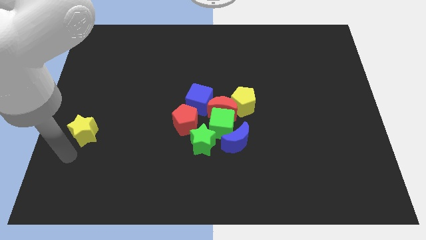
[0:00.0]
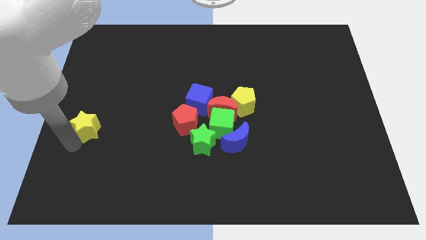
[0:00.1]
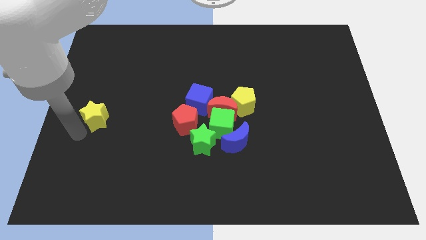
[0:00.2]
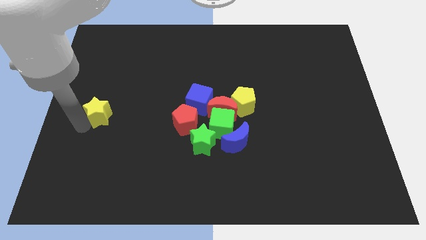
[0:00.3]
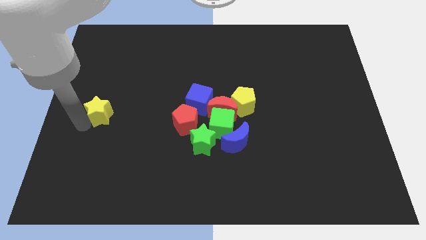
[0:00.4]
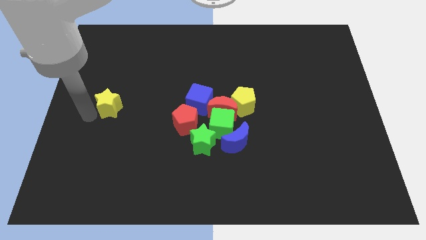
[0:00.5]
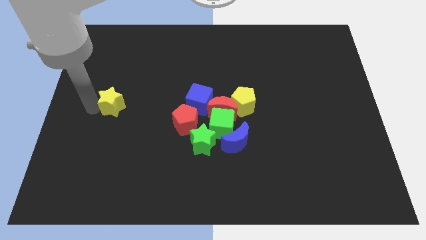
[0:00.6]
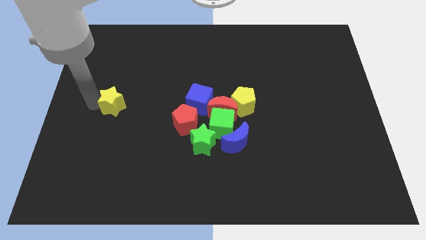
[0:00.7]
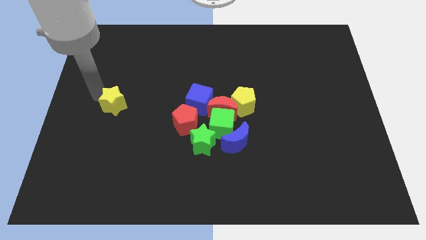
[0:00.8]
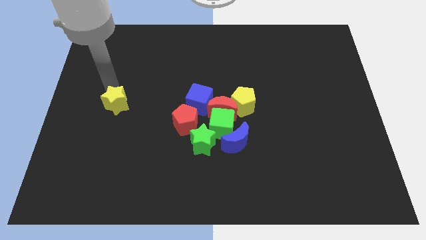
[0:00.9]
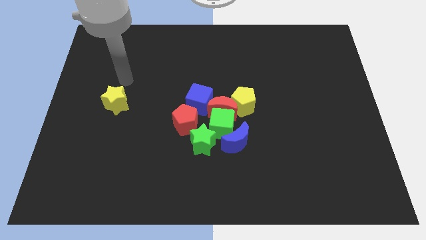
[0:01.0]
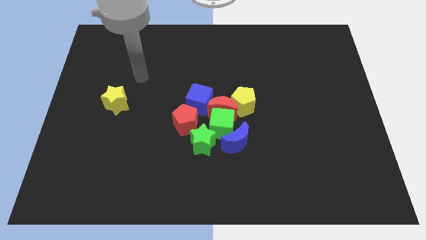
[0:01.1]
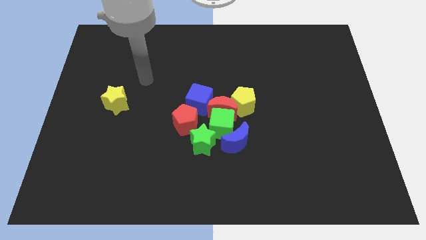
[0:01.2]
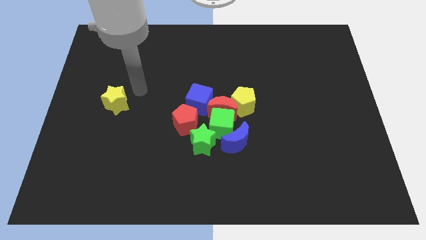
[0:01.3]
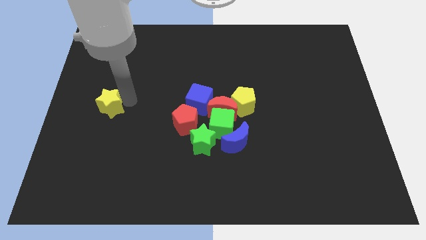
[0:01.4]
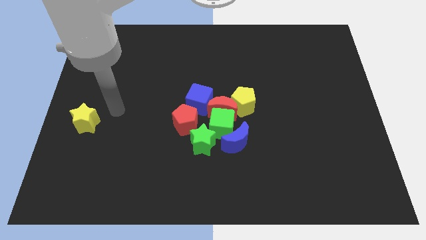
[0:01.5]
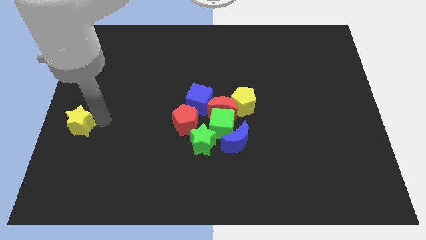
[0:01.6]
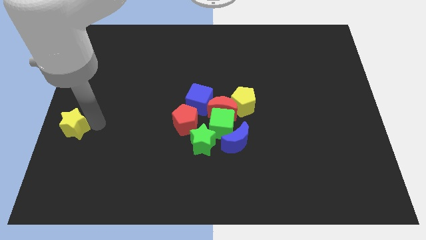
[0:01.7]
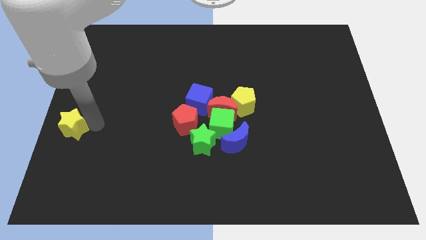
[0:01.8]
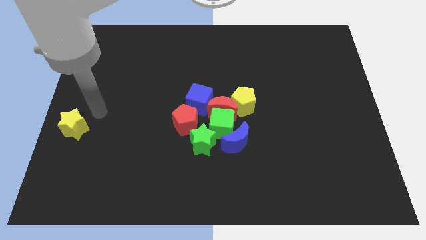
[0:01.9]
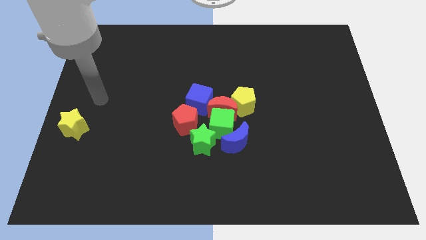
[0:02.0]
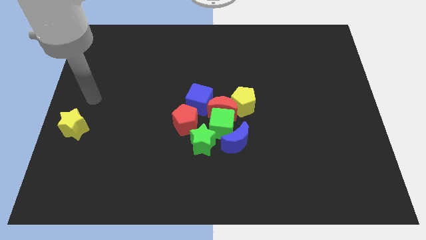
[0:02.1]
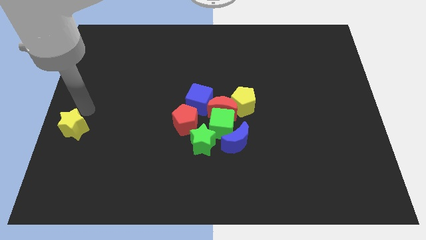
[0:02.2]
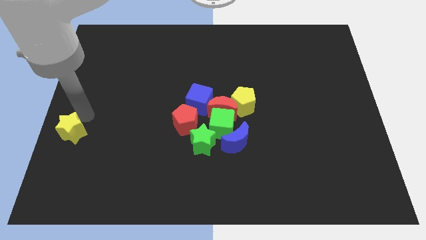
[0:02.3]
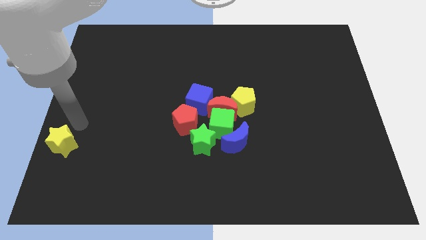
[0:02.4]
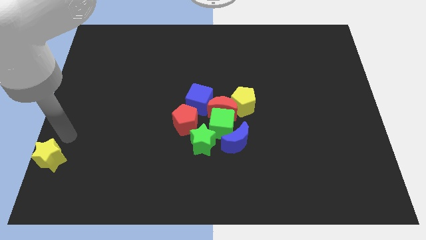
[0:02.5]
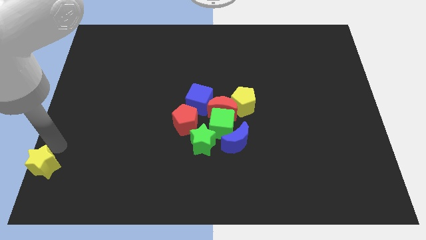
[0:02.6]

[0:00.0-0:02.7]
push the yellow star to the bottom left of the red pentagon

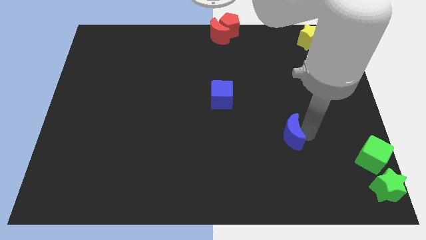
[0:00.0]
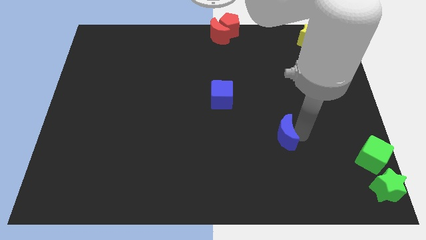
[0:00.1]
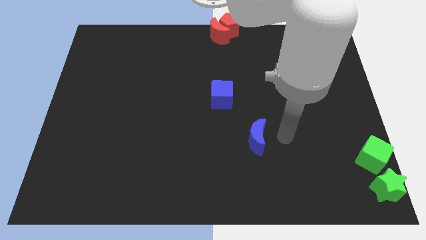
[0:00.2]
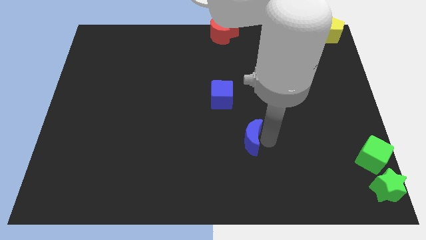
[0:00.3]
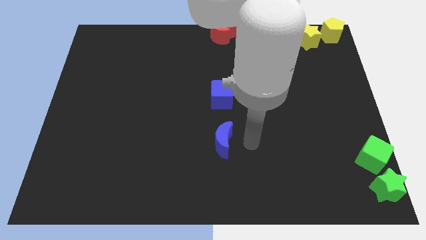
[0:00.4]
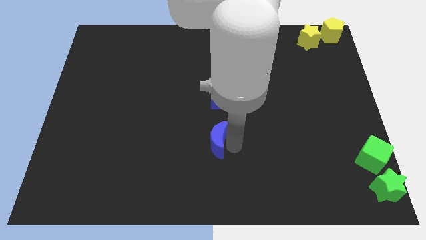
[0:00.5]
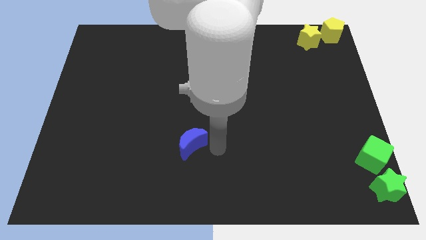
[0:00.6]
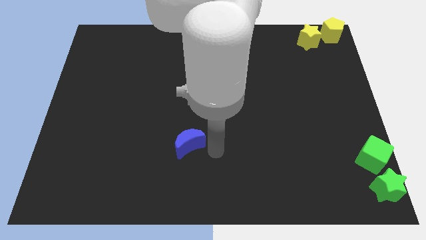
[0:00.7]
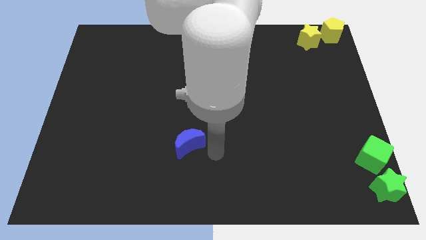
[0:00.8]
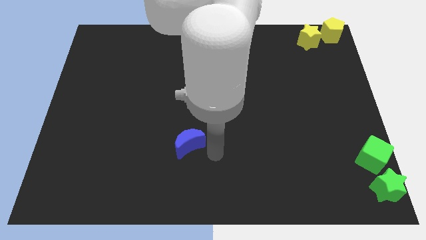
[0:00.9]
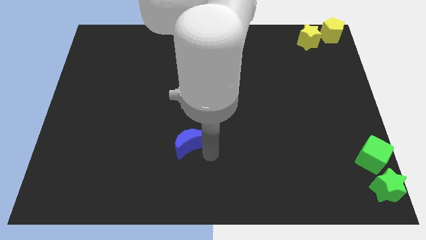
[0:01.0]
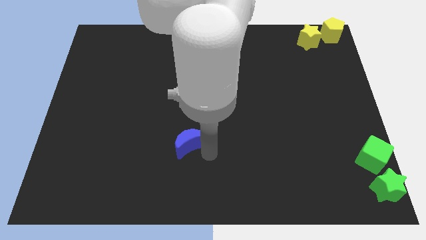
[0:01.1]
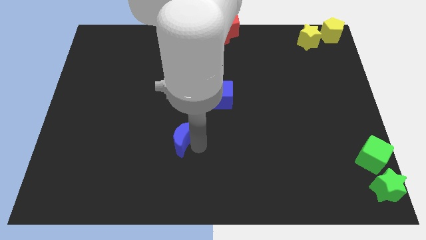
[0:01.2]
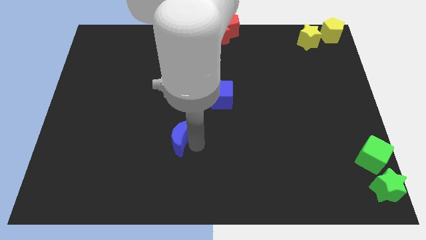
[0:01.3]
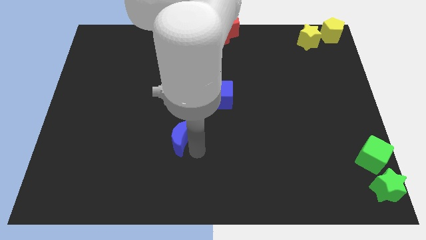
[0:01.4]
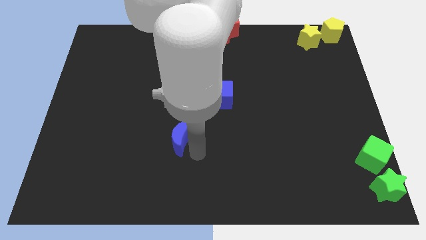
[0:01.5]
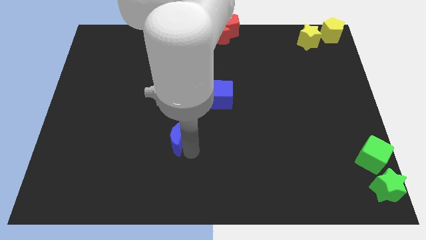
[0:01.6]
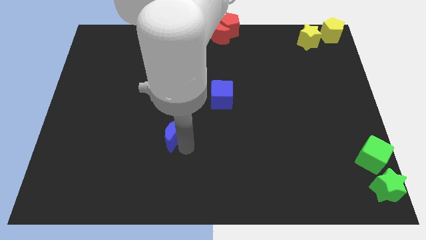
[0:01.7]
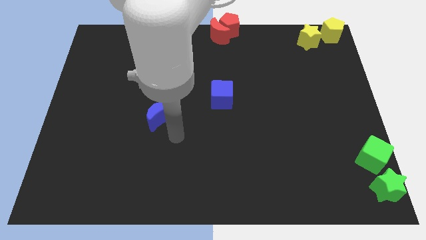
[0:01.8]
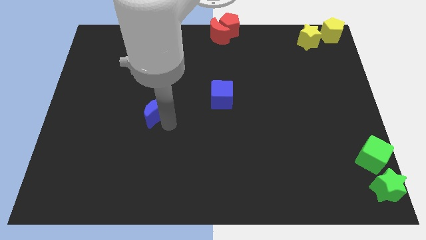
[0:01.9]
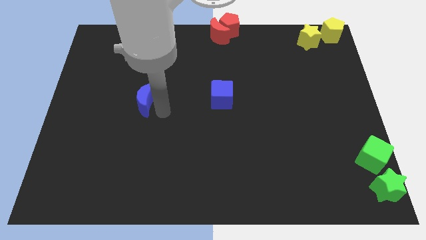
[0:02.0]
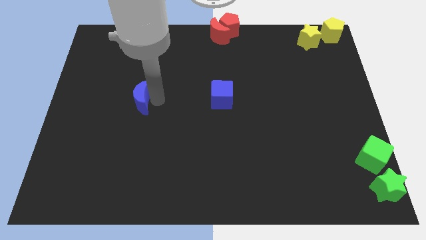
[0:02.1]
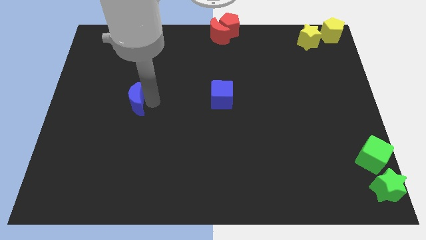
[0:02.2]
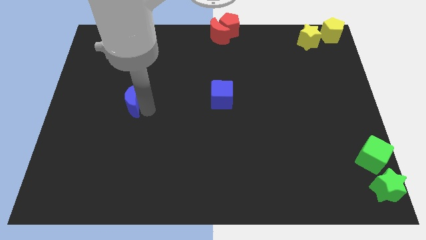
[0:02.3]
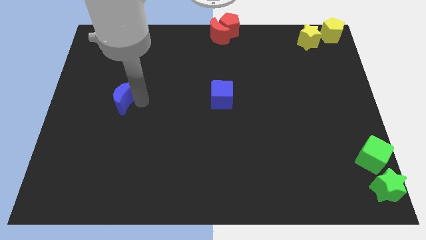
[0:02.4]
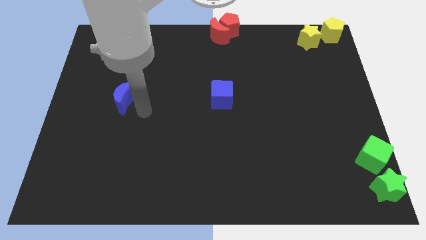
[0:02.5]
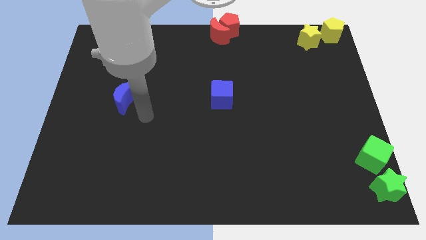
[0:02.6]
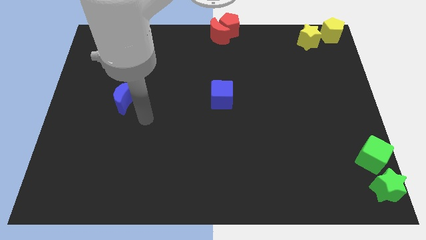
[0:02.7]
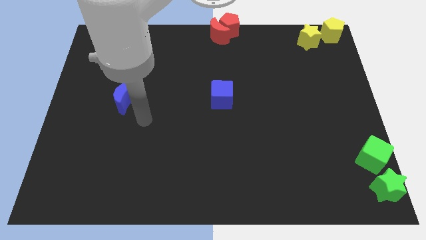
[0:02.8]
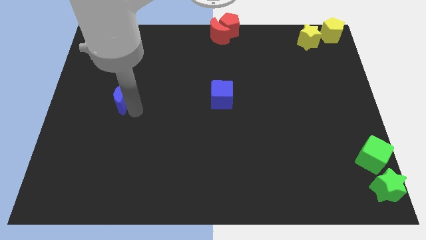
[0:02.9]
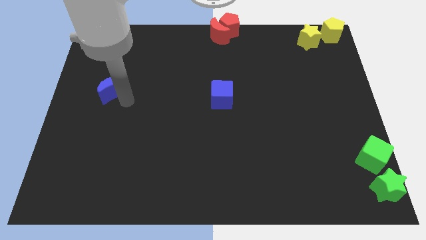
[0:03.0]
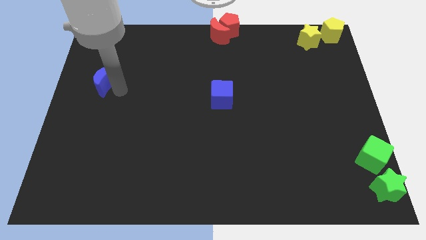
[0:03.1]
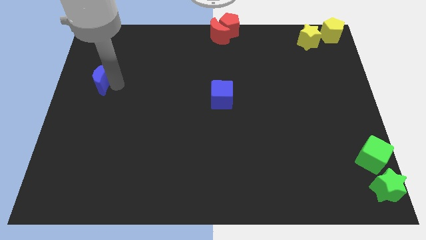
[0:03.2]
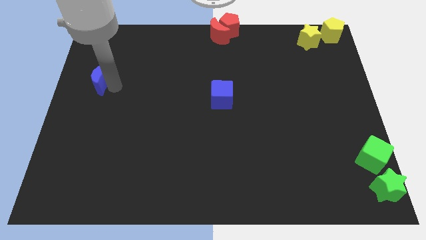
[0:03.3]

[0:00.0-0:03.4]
push the blue moon towards the top left side of the board

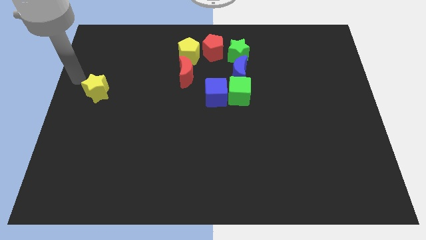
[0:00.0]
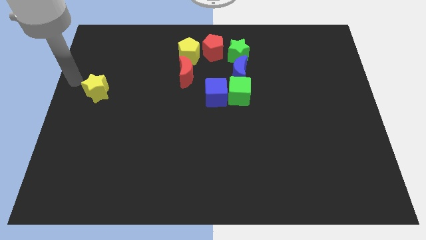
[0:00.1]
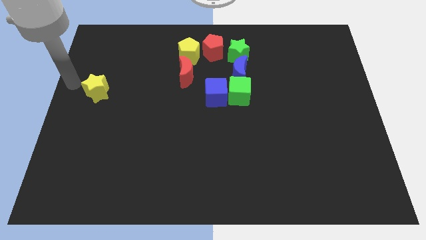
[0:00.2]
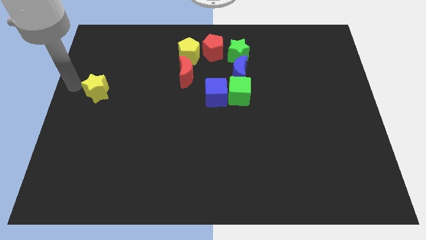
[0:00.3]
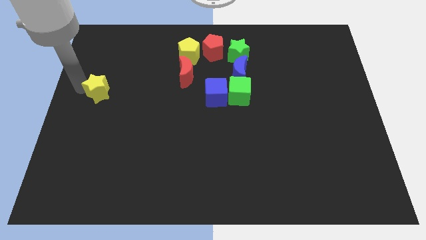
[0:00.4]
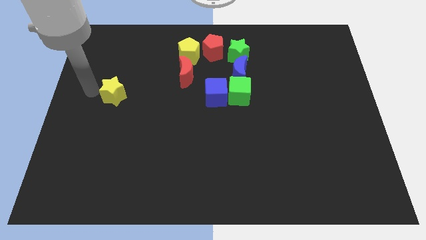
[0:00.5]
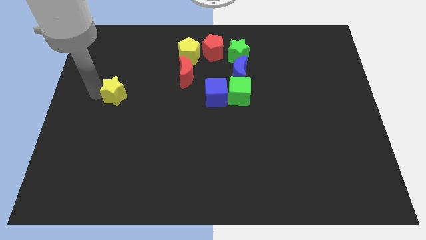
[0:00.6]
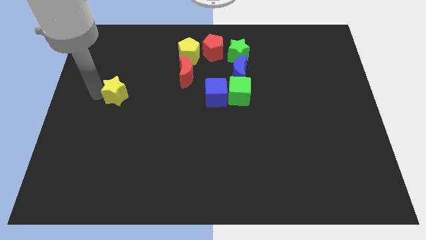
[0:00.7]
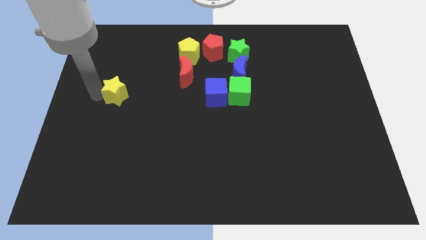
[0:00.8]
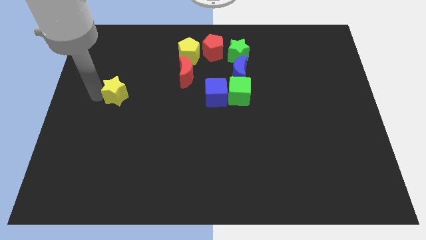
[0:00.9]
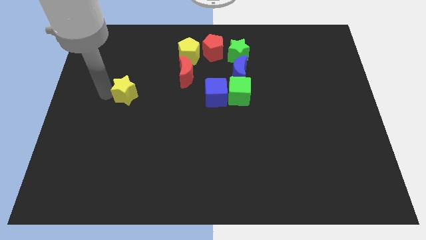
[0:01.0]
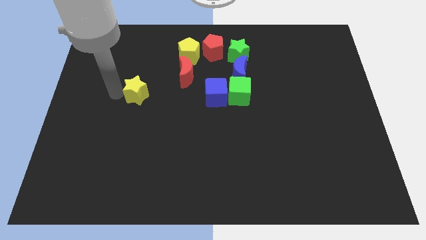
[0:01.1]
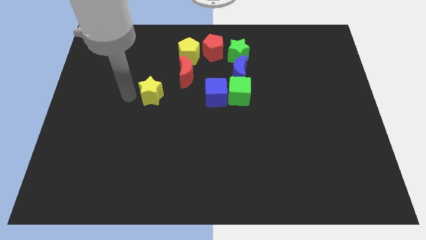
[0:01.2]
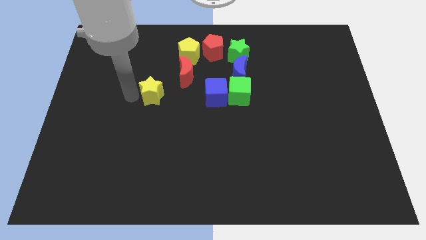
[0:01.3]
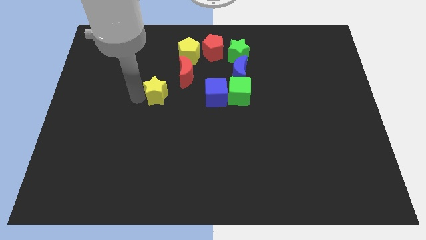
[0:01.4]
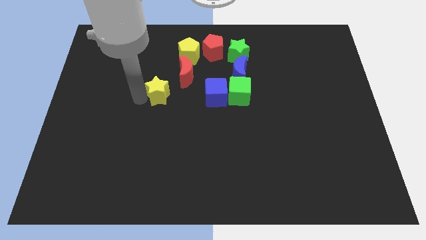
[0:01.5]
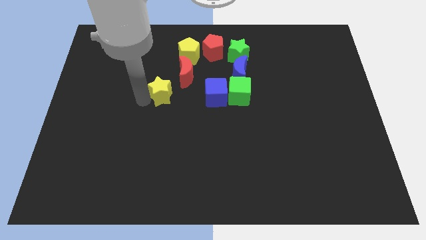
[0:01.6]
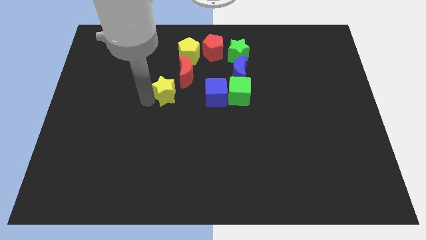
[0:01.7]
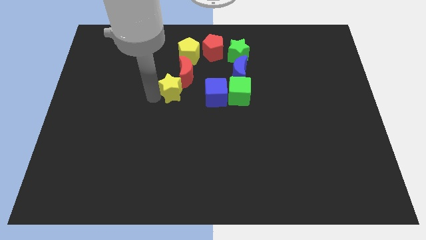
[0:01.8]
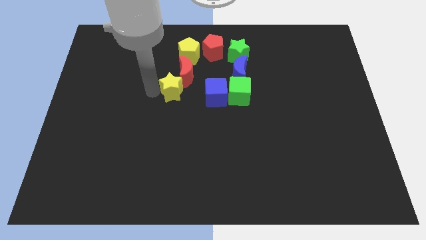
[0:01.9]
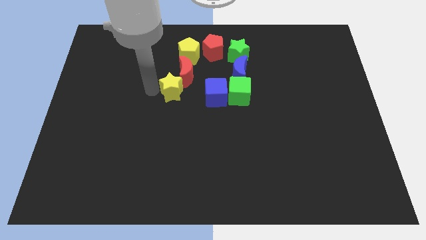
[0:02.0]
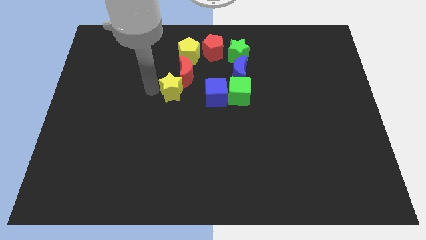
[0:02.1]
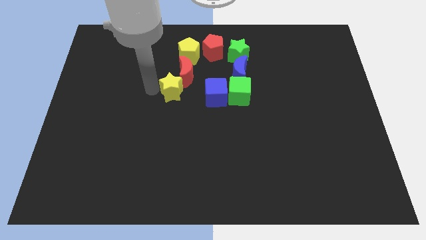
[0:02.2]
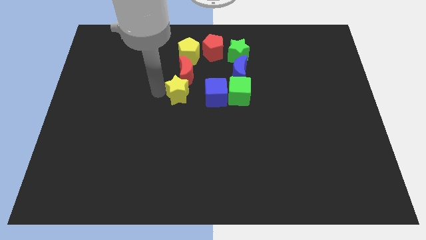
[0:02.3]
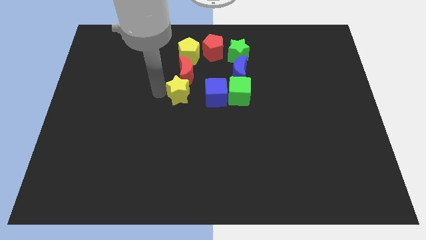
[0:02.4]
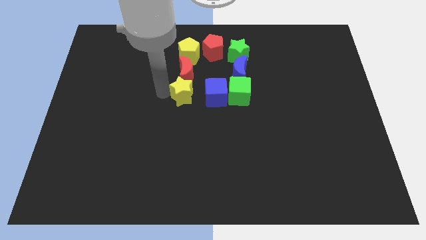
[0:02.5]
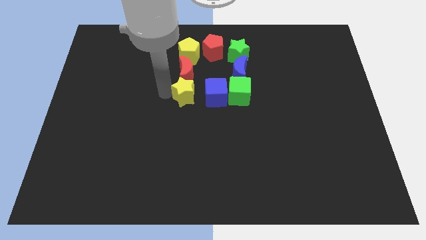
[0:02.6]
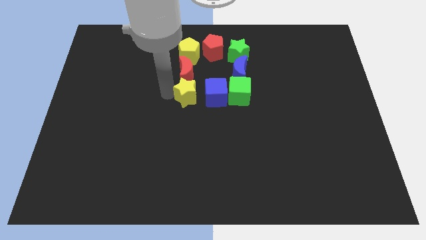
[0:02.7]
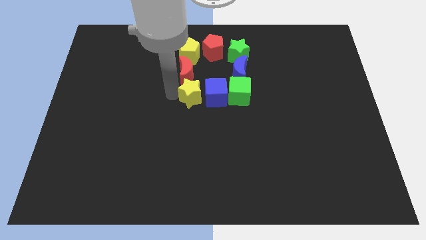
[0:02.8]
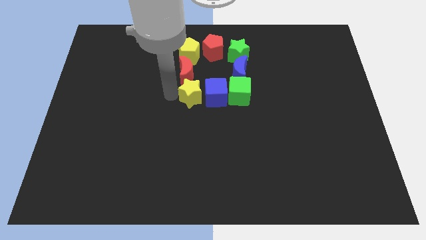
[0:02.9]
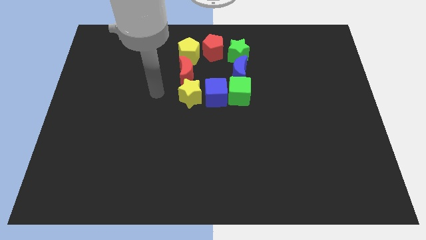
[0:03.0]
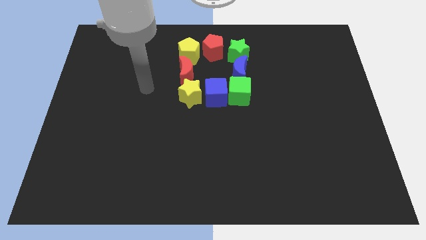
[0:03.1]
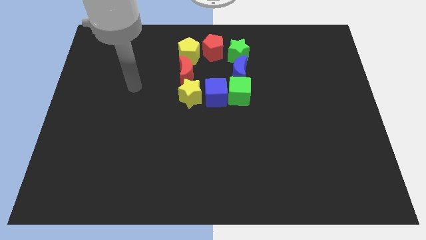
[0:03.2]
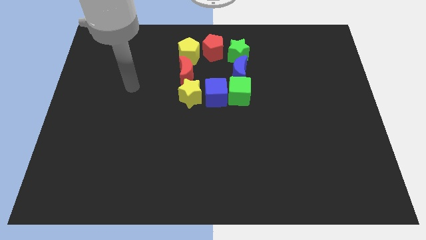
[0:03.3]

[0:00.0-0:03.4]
place the yellow star to the bottom of the red moon
